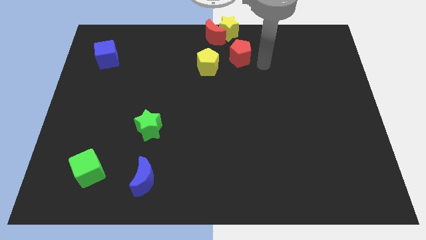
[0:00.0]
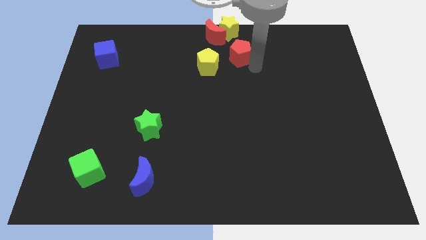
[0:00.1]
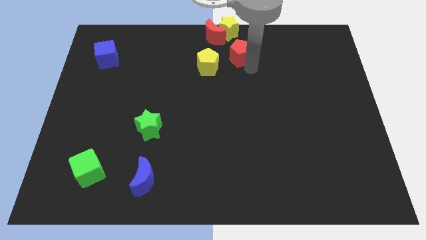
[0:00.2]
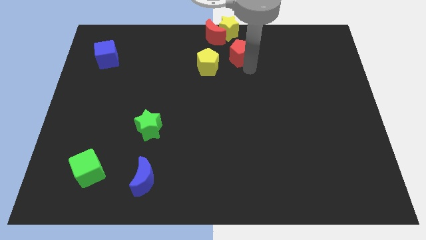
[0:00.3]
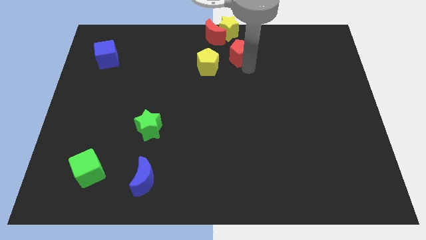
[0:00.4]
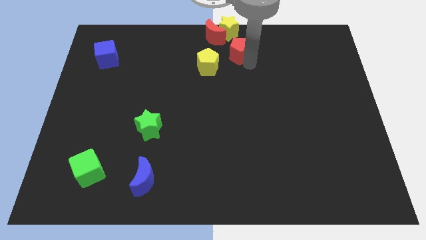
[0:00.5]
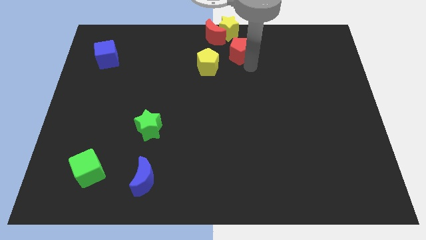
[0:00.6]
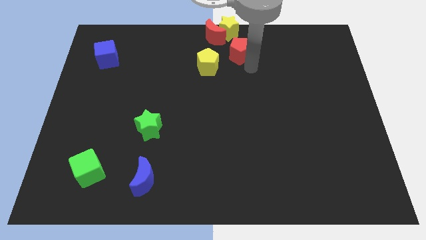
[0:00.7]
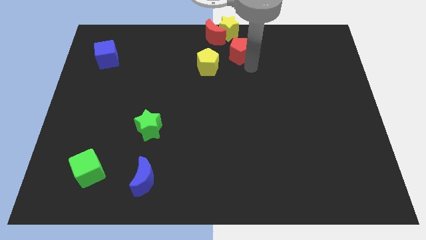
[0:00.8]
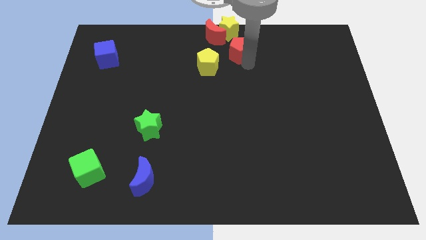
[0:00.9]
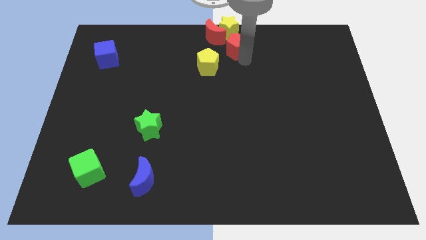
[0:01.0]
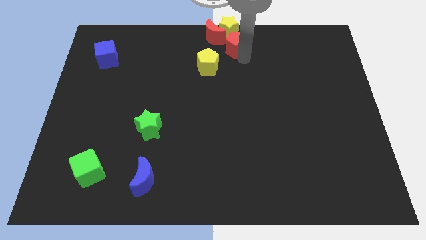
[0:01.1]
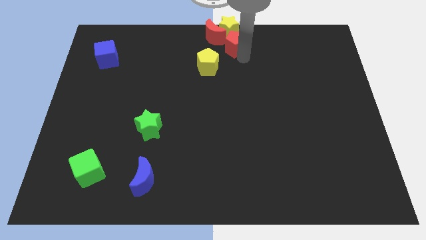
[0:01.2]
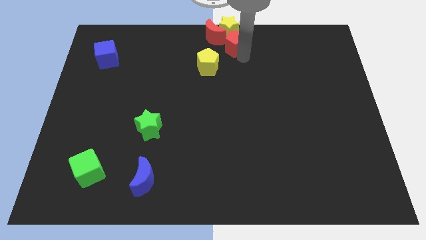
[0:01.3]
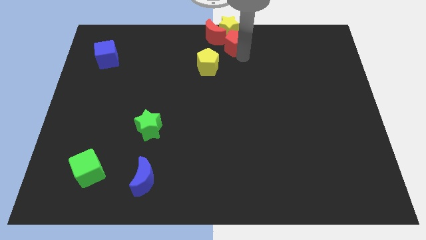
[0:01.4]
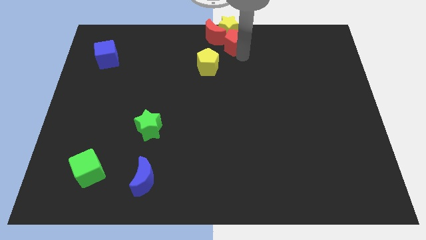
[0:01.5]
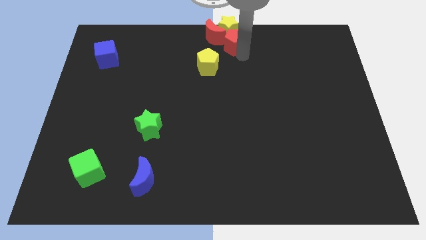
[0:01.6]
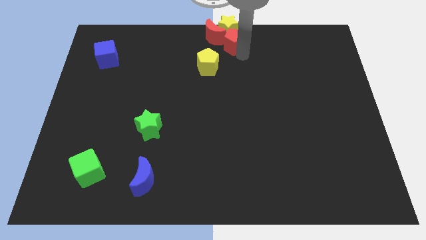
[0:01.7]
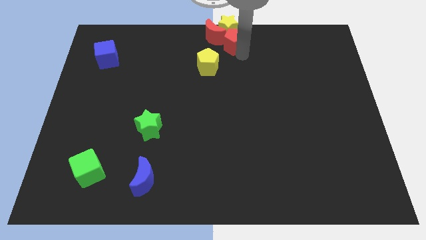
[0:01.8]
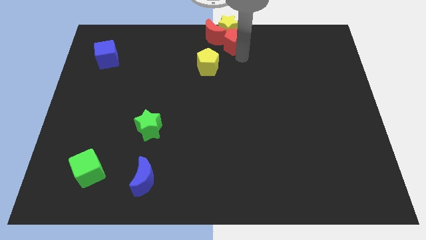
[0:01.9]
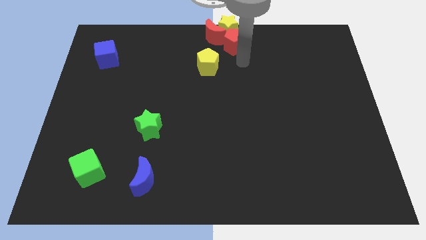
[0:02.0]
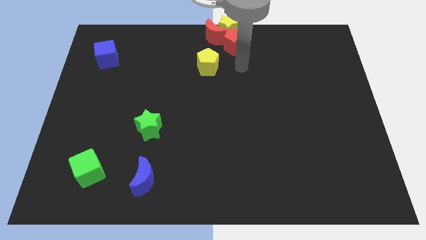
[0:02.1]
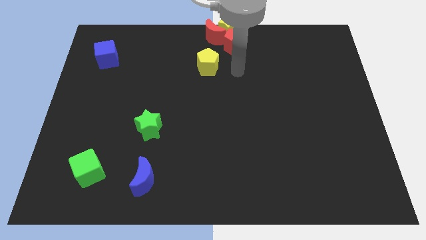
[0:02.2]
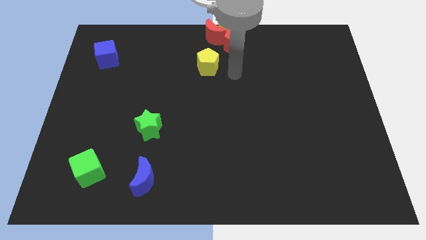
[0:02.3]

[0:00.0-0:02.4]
push the red pentagon into the yellow star

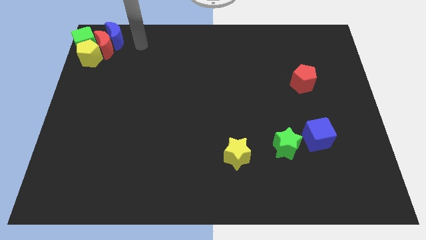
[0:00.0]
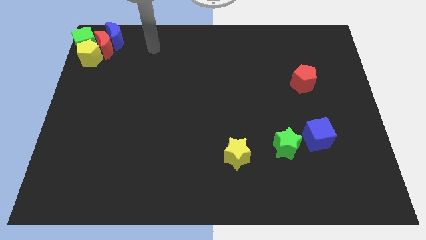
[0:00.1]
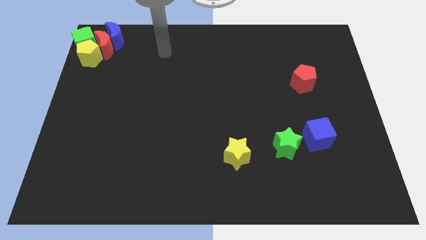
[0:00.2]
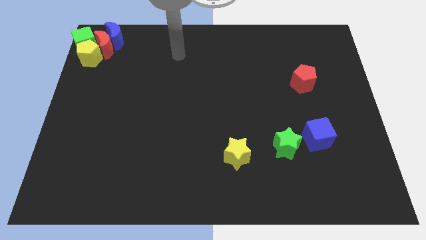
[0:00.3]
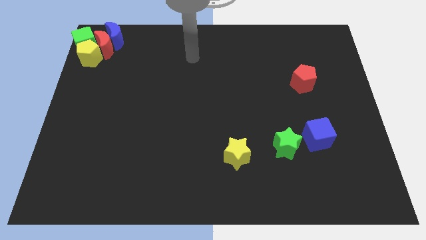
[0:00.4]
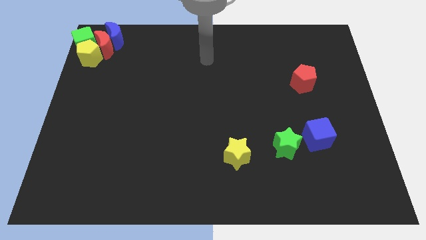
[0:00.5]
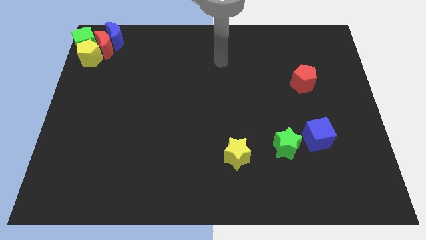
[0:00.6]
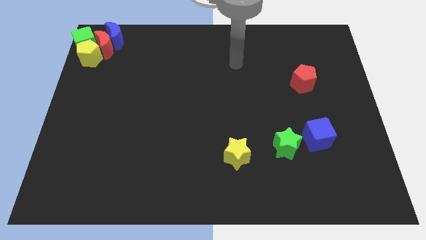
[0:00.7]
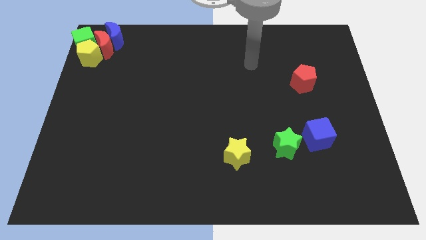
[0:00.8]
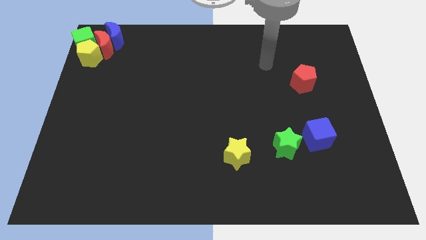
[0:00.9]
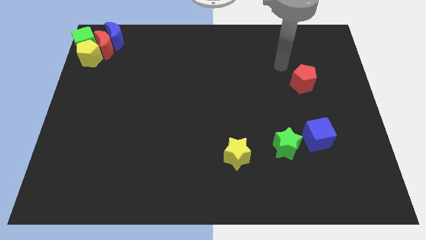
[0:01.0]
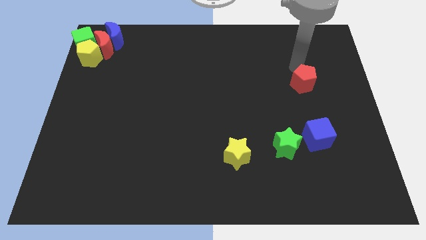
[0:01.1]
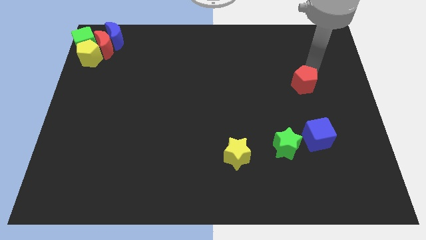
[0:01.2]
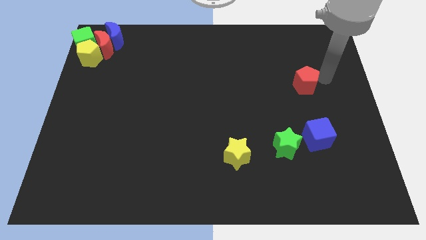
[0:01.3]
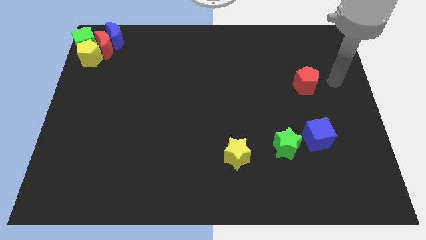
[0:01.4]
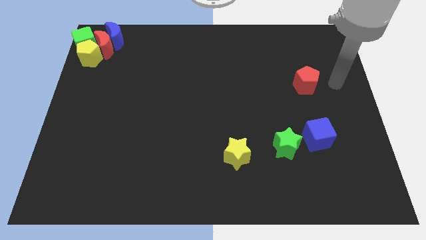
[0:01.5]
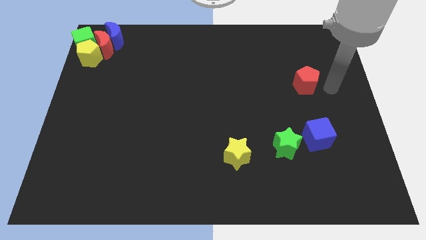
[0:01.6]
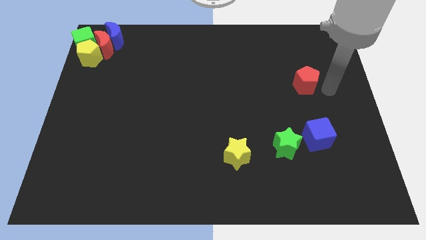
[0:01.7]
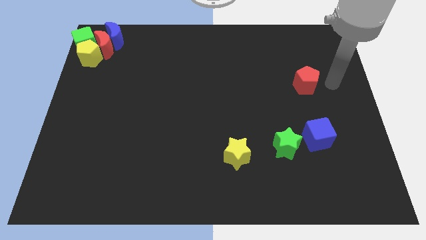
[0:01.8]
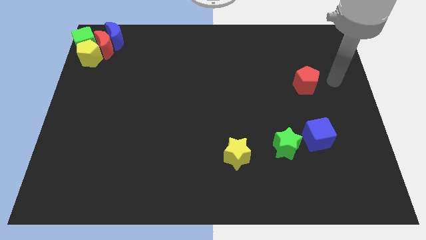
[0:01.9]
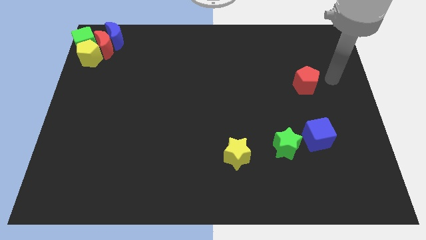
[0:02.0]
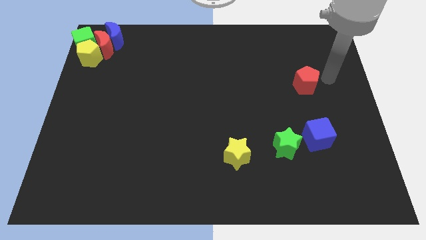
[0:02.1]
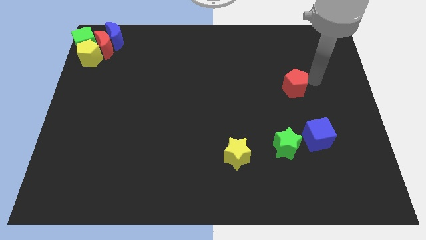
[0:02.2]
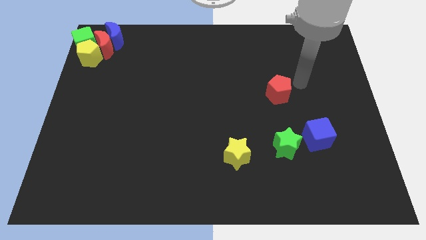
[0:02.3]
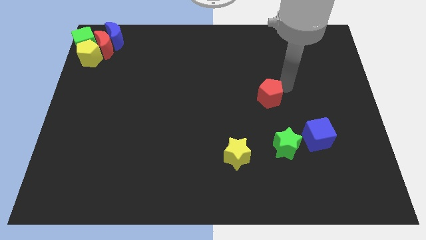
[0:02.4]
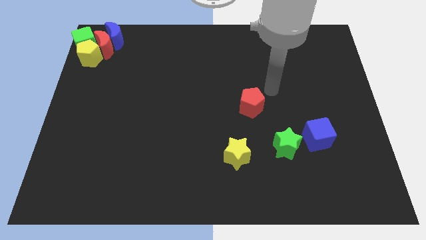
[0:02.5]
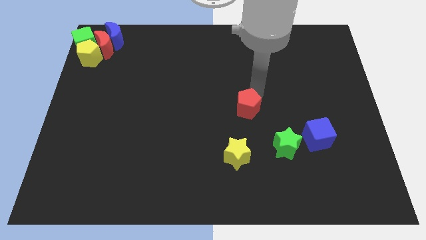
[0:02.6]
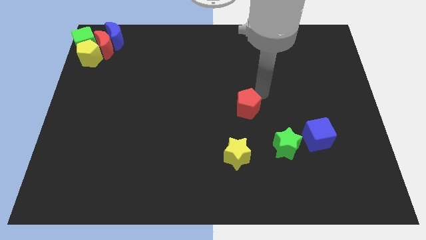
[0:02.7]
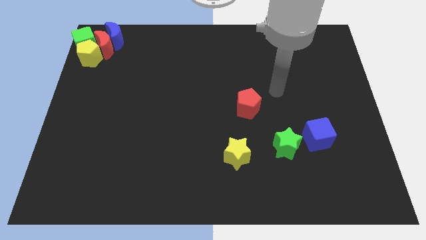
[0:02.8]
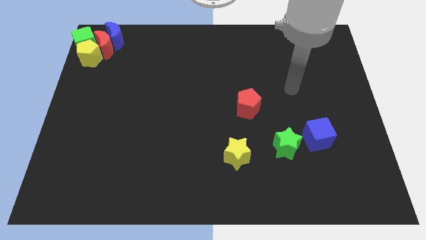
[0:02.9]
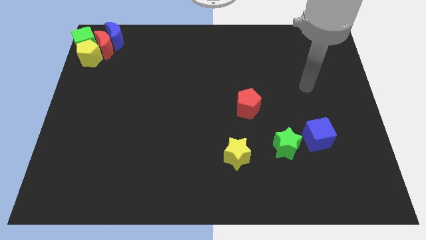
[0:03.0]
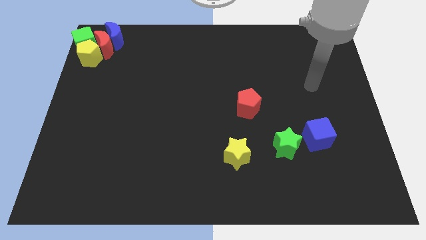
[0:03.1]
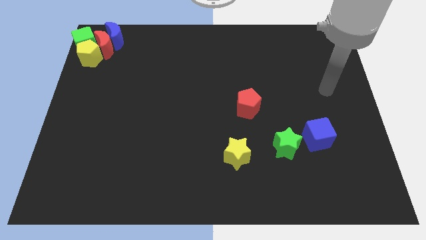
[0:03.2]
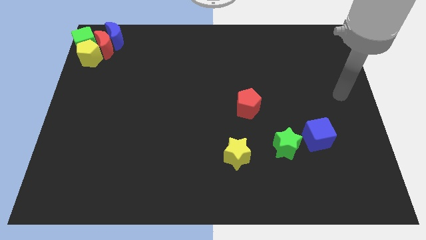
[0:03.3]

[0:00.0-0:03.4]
place the red pentagon above the yellow star

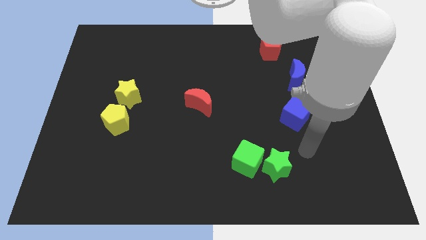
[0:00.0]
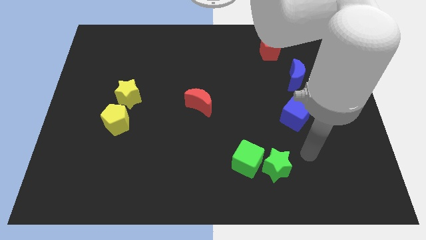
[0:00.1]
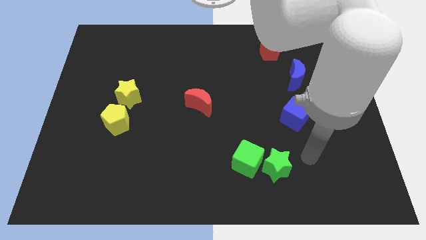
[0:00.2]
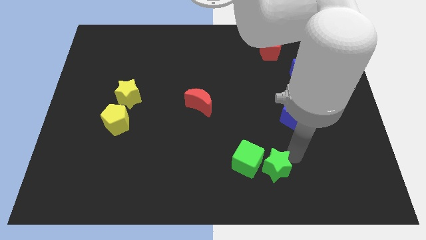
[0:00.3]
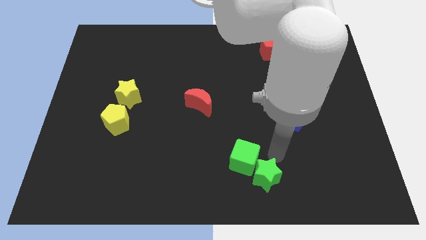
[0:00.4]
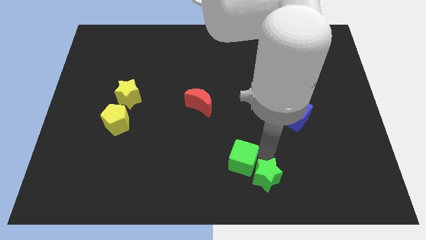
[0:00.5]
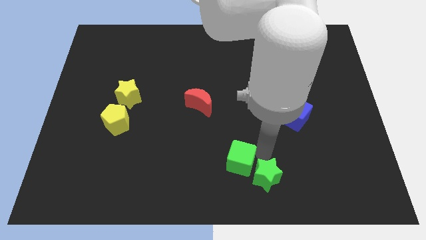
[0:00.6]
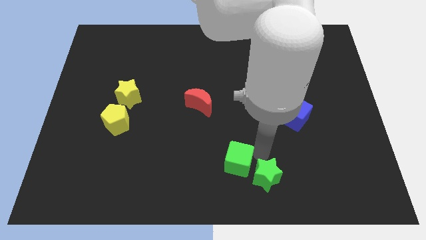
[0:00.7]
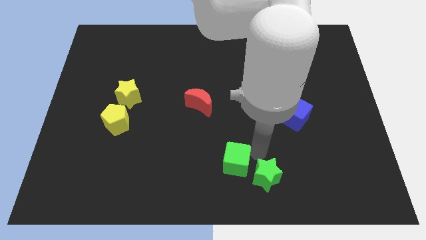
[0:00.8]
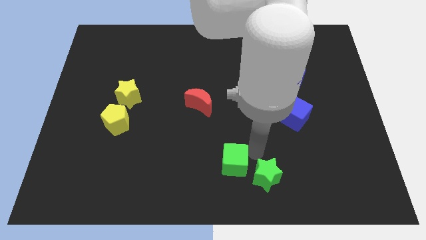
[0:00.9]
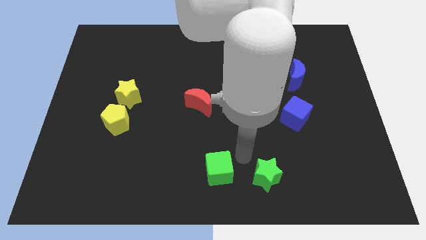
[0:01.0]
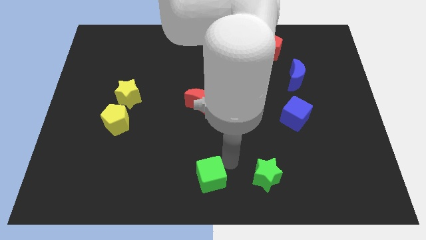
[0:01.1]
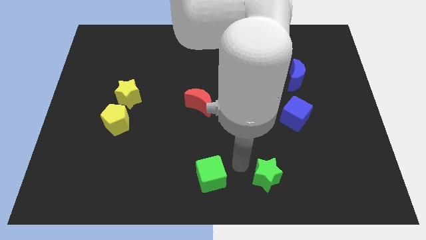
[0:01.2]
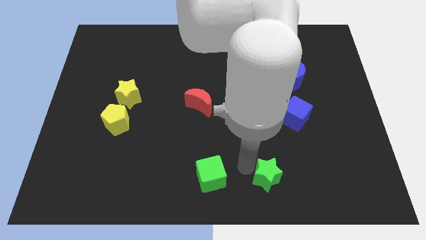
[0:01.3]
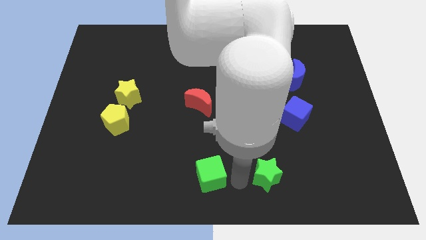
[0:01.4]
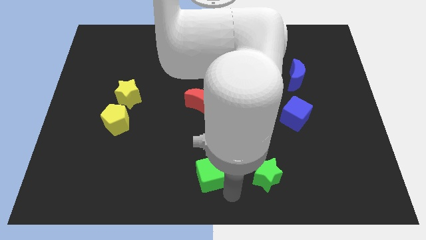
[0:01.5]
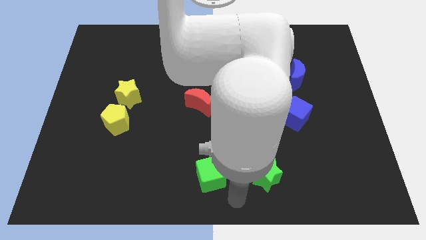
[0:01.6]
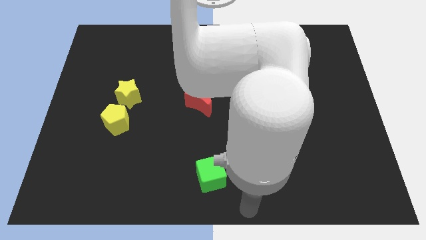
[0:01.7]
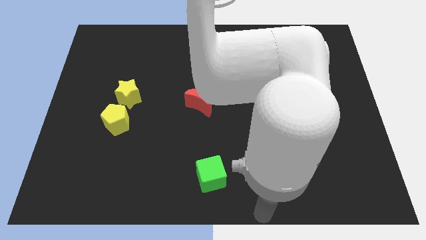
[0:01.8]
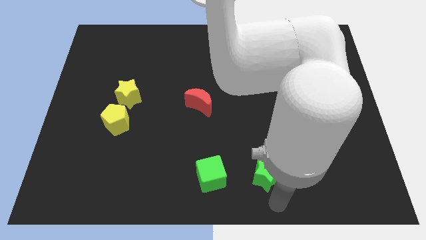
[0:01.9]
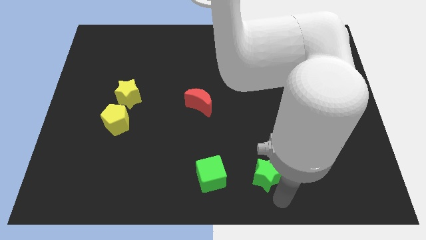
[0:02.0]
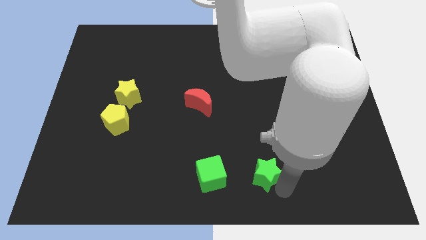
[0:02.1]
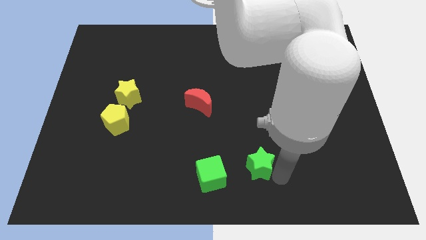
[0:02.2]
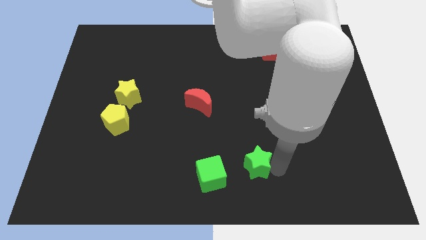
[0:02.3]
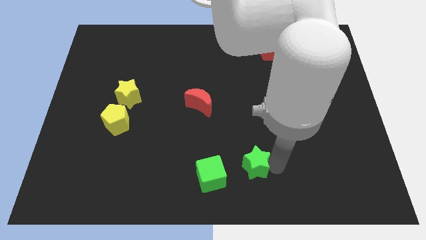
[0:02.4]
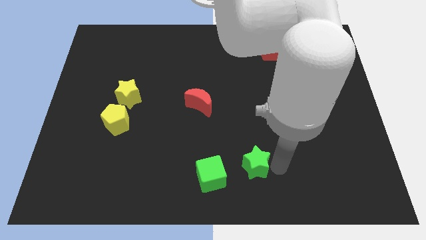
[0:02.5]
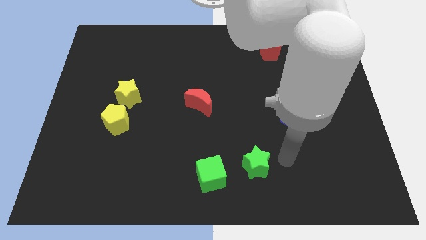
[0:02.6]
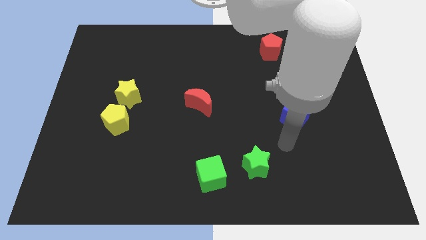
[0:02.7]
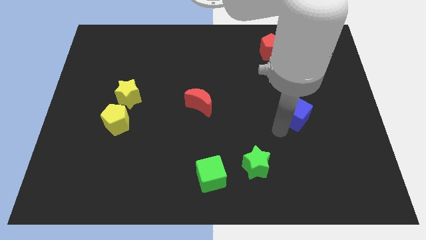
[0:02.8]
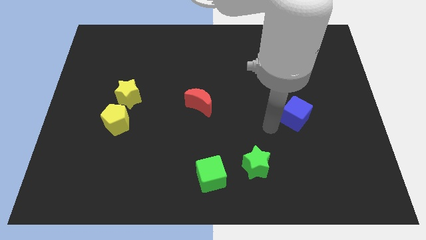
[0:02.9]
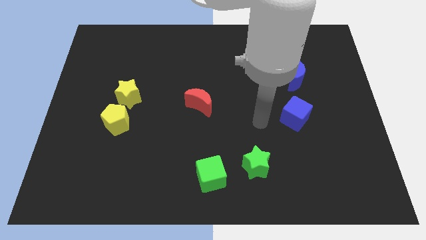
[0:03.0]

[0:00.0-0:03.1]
separate the green blocks each others

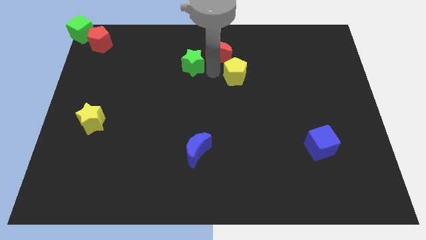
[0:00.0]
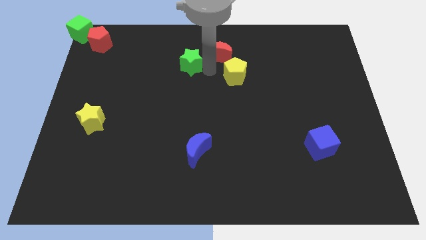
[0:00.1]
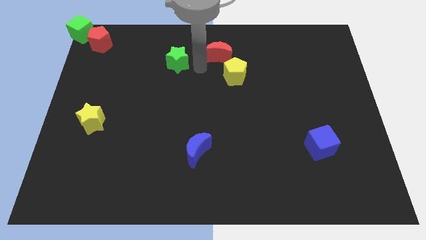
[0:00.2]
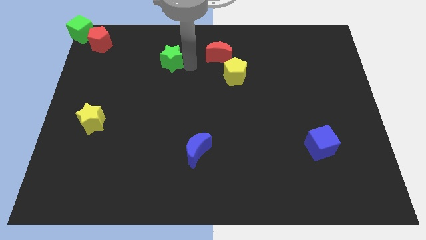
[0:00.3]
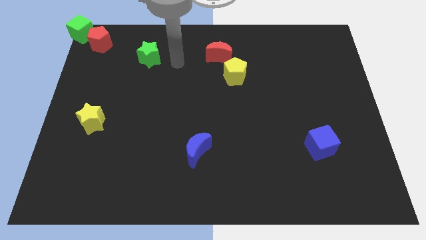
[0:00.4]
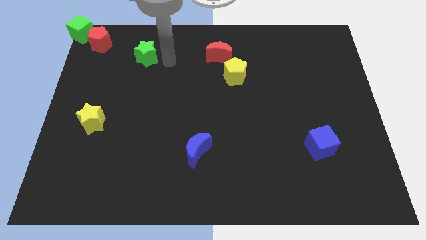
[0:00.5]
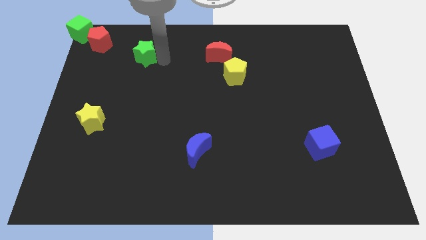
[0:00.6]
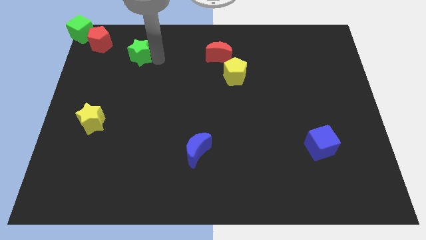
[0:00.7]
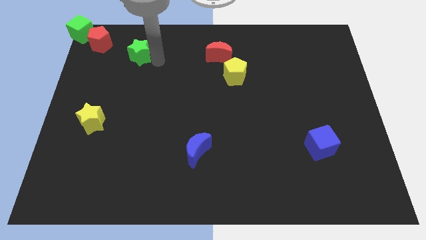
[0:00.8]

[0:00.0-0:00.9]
push the green star towards the right of the red pentagon
